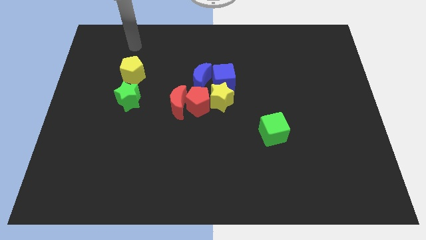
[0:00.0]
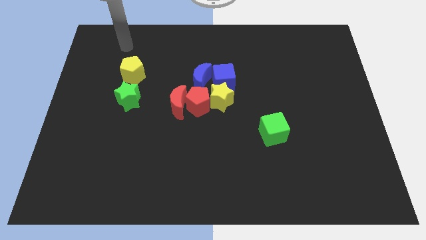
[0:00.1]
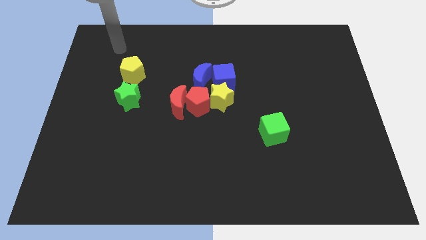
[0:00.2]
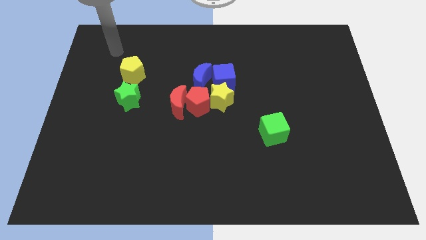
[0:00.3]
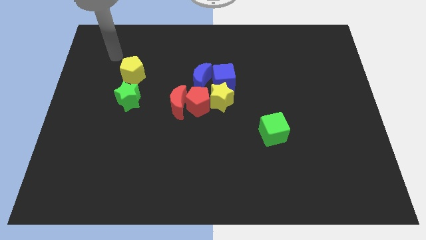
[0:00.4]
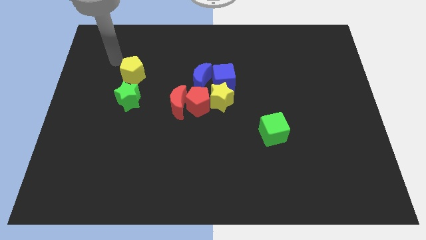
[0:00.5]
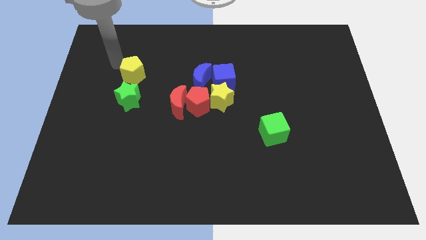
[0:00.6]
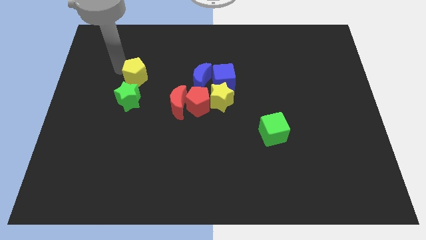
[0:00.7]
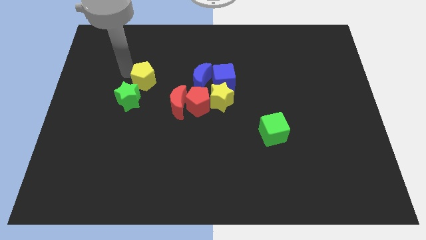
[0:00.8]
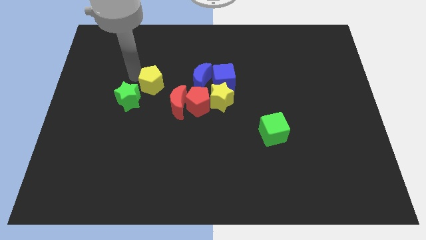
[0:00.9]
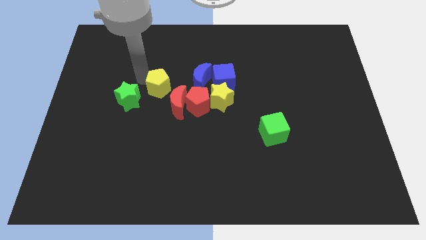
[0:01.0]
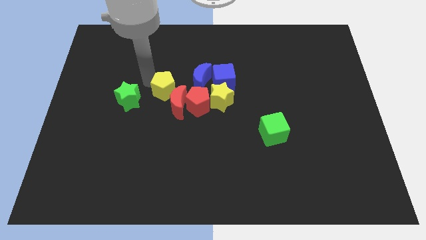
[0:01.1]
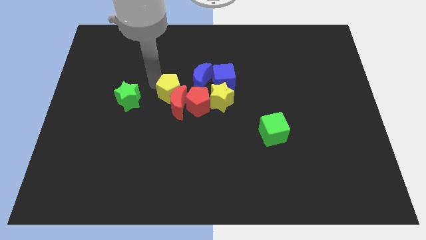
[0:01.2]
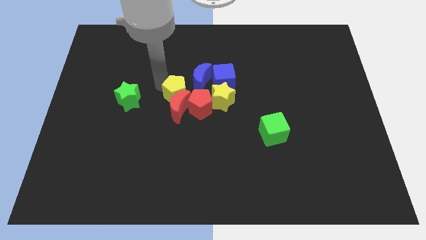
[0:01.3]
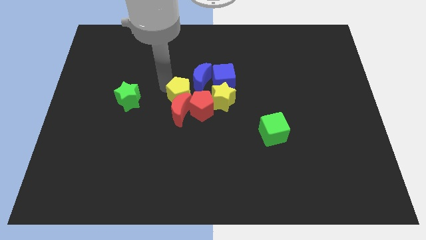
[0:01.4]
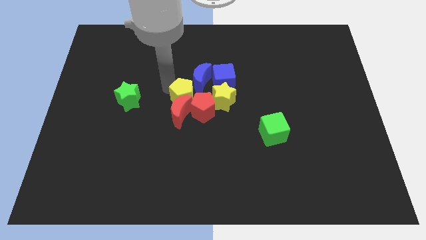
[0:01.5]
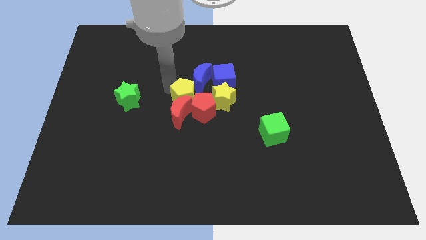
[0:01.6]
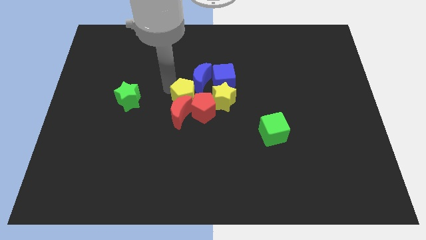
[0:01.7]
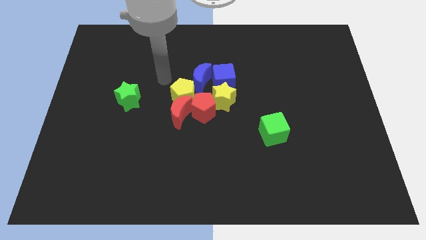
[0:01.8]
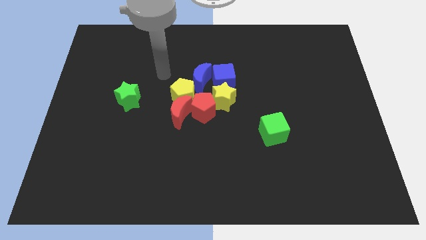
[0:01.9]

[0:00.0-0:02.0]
move the yellow pentagon into the red crescent

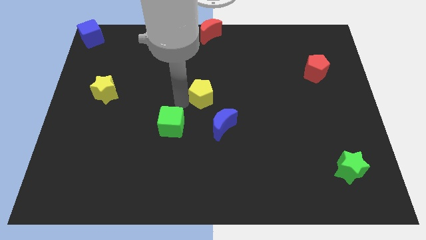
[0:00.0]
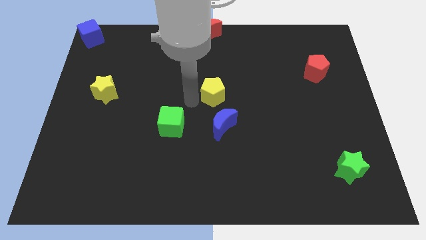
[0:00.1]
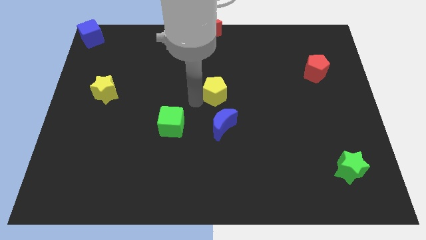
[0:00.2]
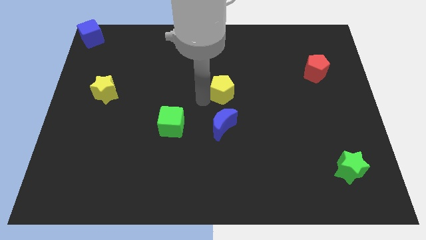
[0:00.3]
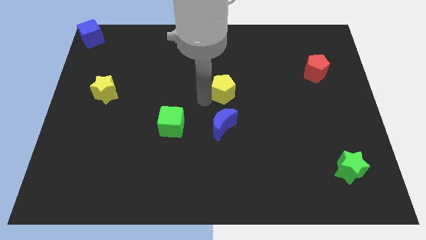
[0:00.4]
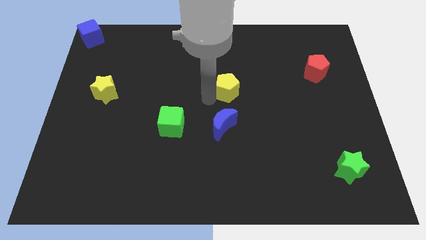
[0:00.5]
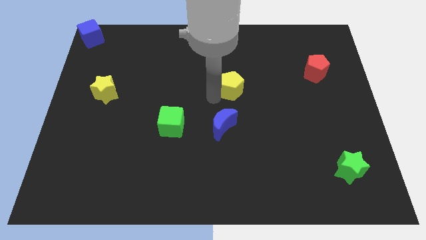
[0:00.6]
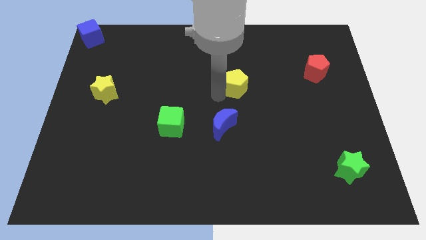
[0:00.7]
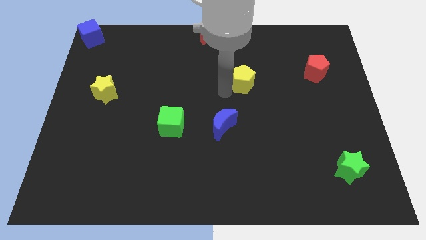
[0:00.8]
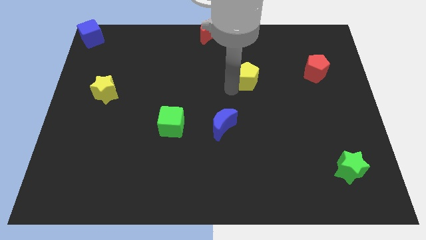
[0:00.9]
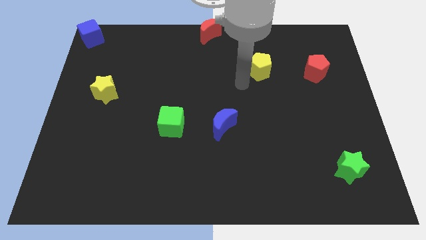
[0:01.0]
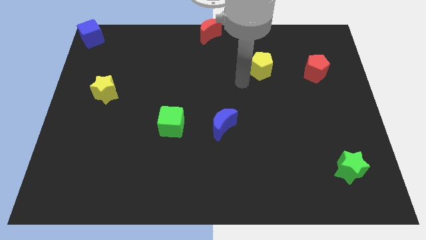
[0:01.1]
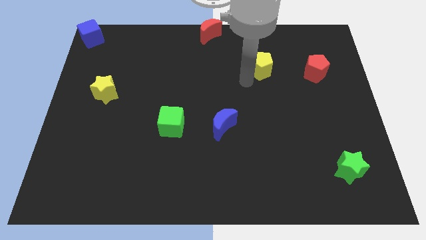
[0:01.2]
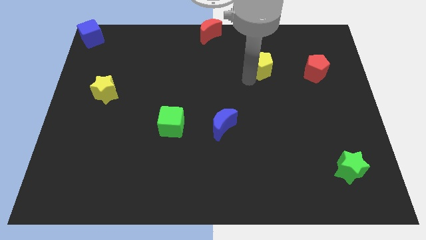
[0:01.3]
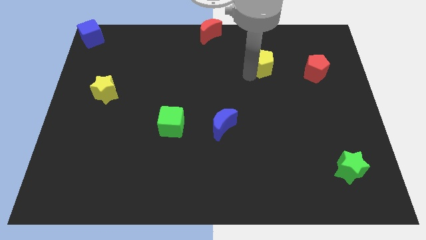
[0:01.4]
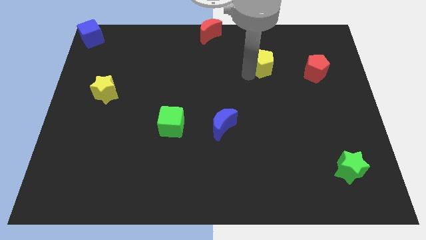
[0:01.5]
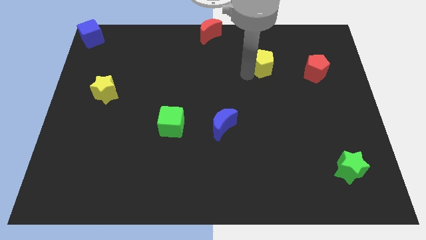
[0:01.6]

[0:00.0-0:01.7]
push the yellow pentagon to the left of the red pentagon

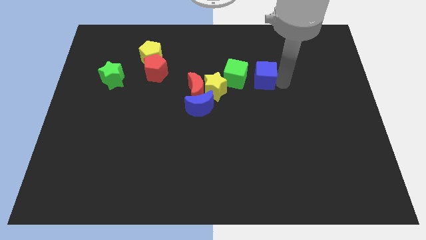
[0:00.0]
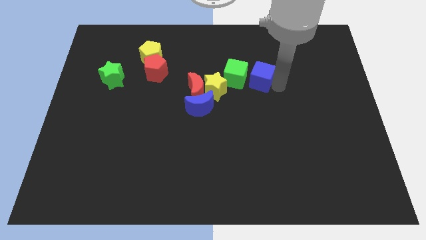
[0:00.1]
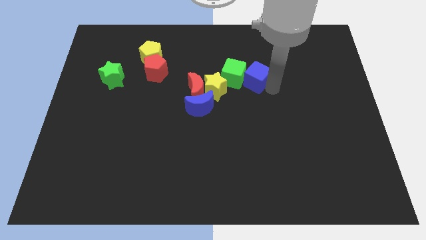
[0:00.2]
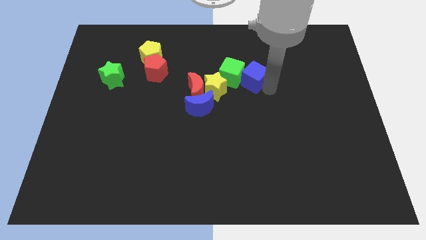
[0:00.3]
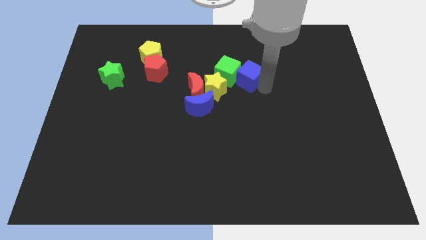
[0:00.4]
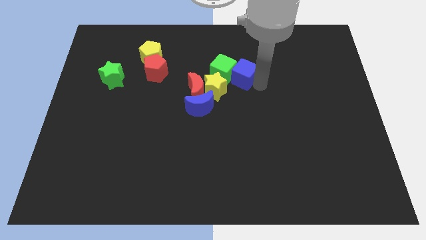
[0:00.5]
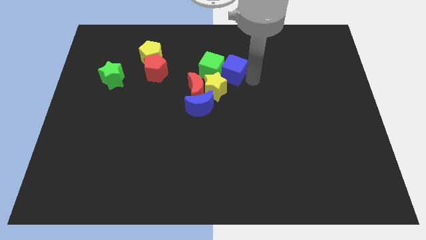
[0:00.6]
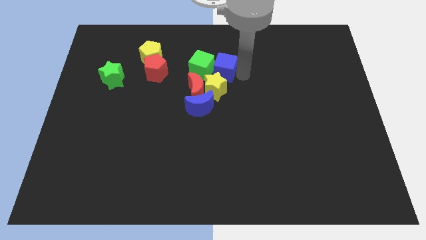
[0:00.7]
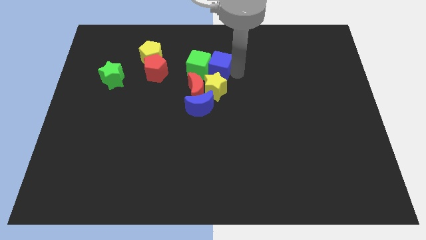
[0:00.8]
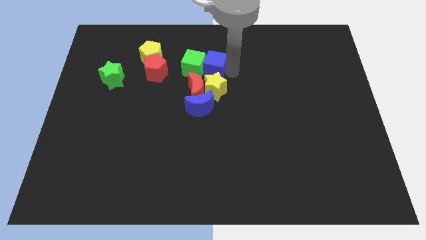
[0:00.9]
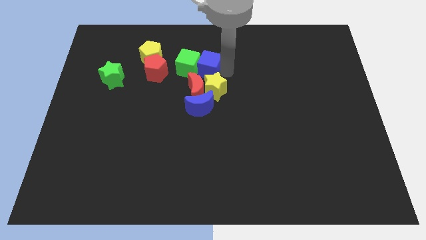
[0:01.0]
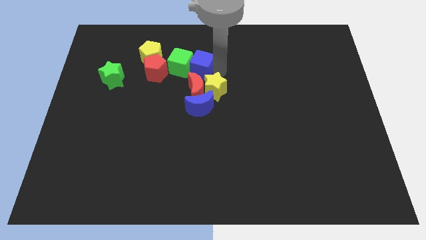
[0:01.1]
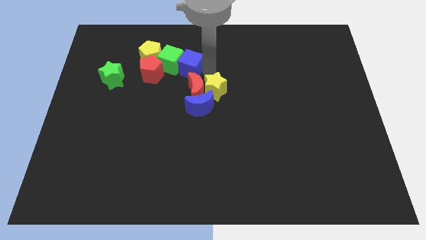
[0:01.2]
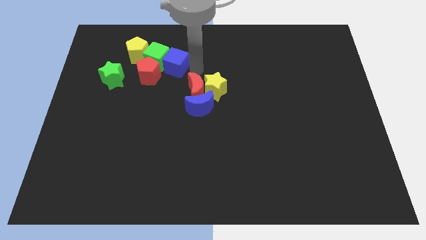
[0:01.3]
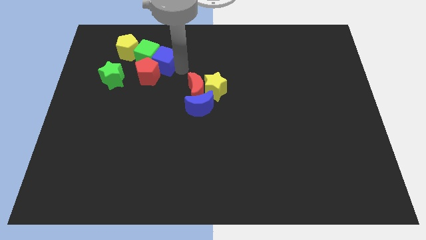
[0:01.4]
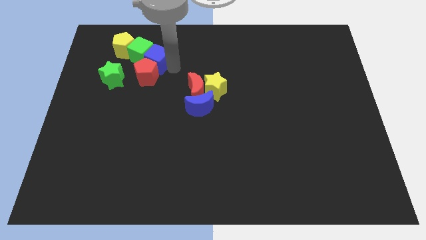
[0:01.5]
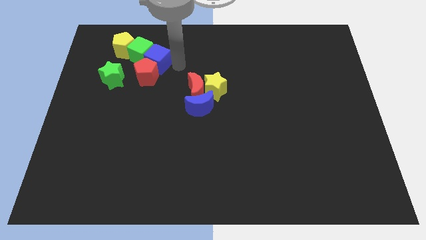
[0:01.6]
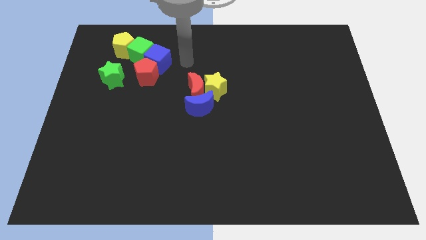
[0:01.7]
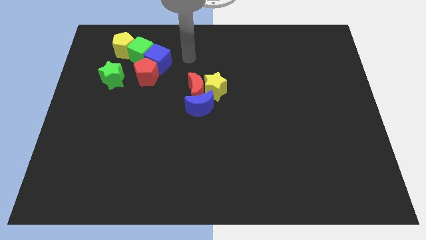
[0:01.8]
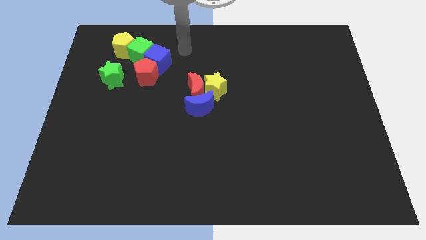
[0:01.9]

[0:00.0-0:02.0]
push the blue cube into the green cube

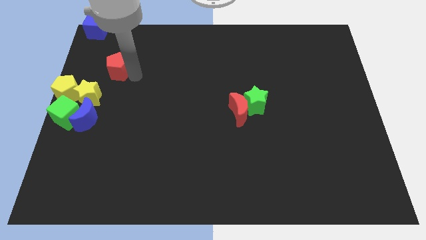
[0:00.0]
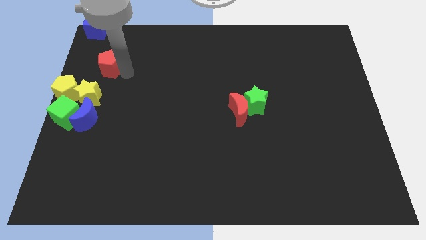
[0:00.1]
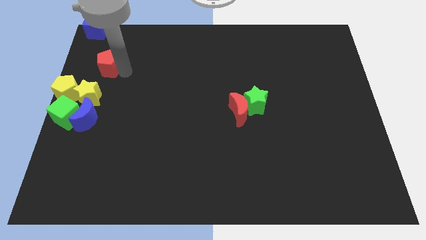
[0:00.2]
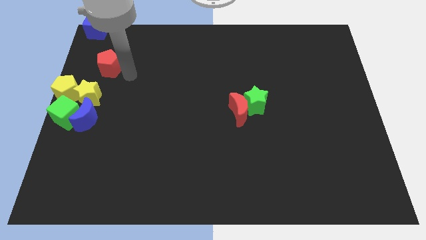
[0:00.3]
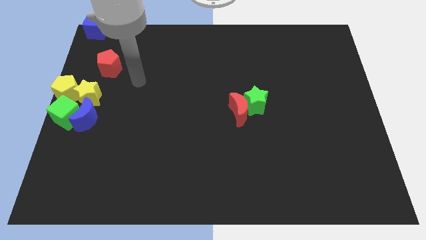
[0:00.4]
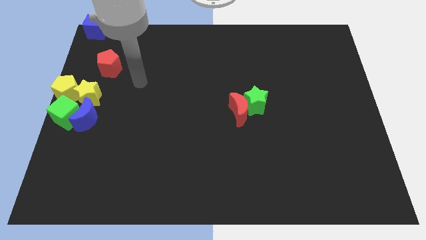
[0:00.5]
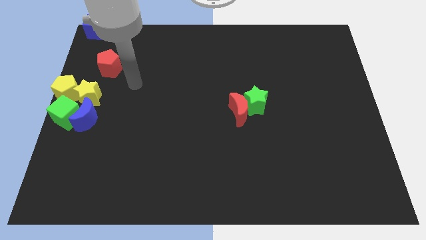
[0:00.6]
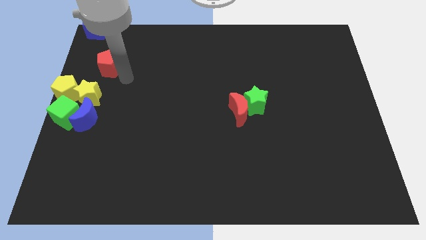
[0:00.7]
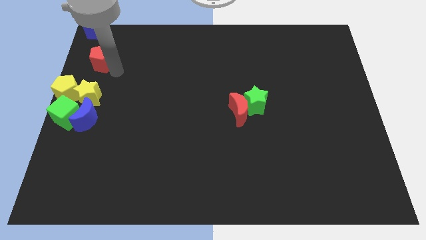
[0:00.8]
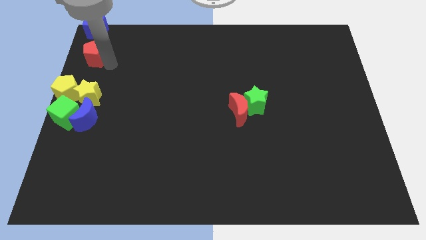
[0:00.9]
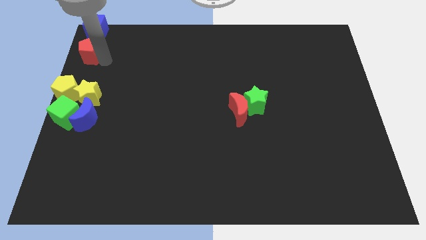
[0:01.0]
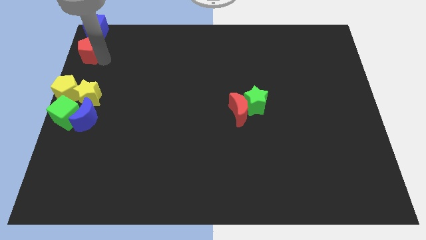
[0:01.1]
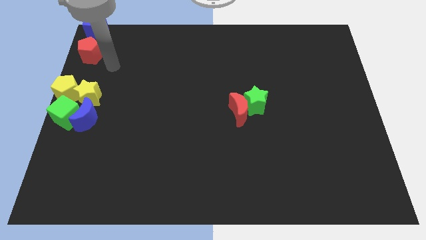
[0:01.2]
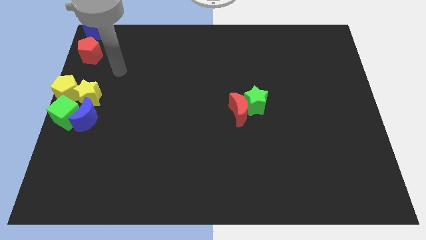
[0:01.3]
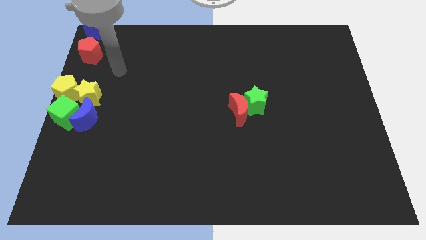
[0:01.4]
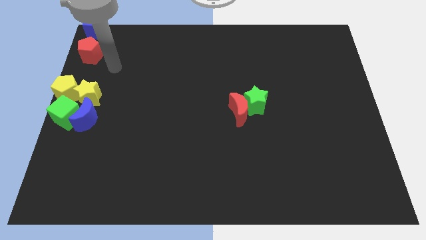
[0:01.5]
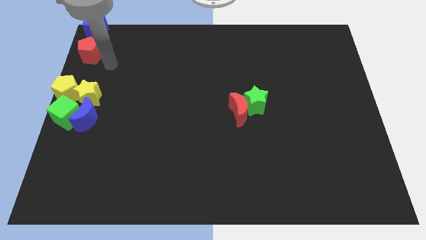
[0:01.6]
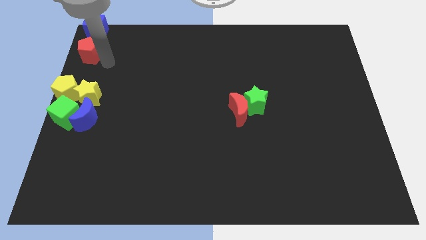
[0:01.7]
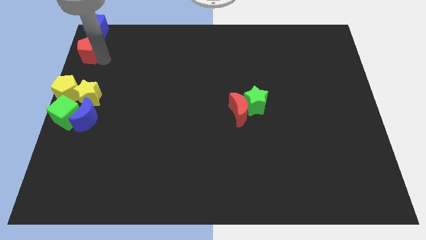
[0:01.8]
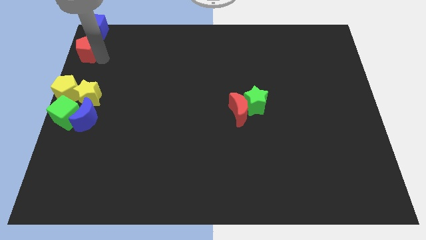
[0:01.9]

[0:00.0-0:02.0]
move the red pentagon to the bottom of the blue cube

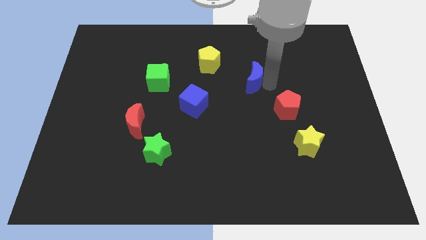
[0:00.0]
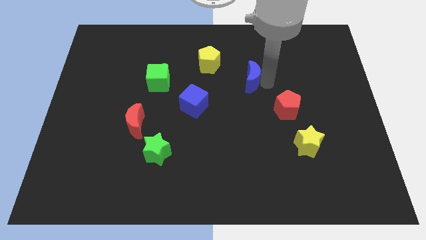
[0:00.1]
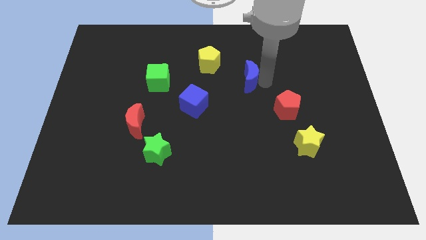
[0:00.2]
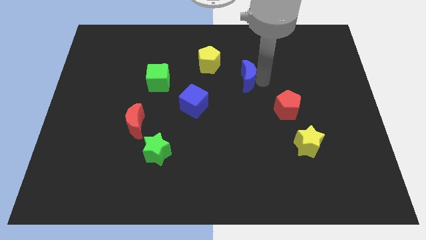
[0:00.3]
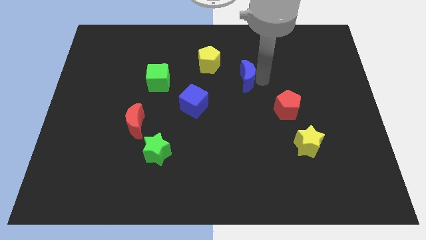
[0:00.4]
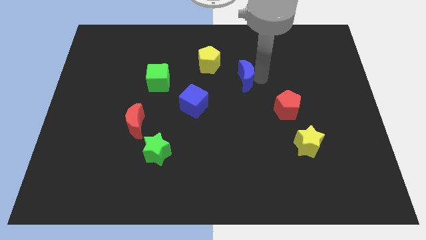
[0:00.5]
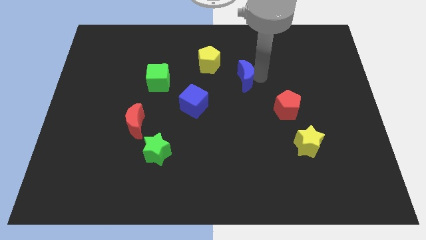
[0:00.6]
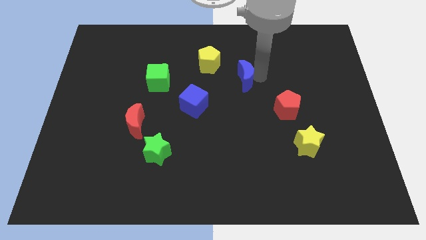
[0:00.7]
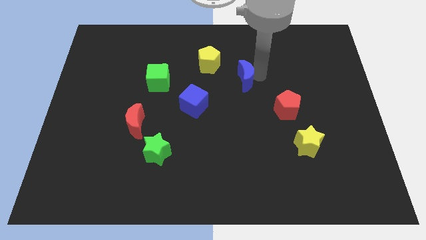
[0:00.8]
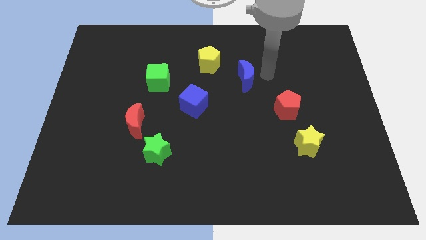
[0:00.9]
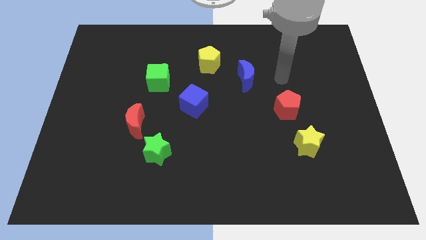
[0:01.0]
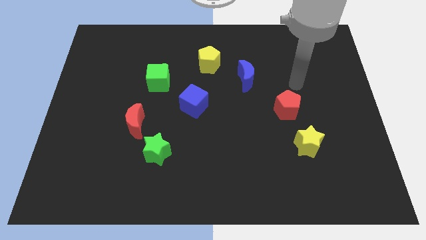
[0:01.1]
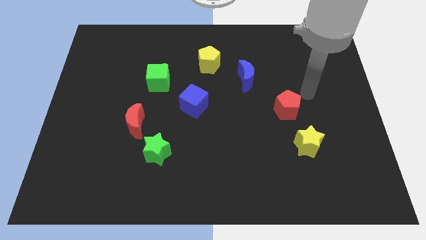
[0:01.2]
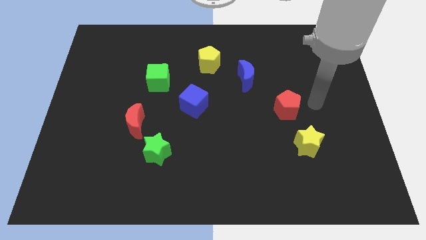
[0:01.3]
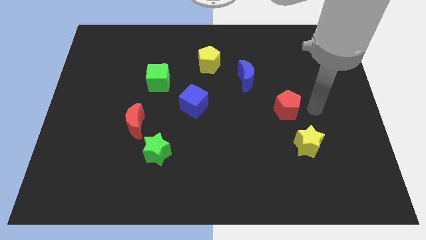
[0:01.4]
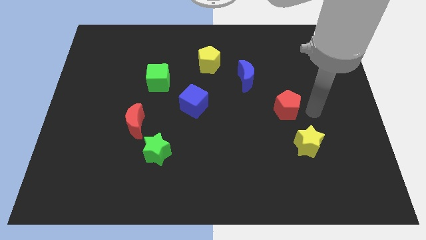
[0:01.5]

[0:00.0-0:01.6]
place the blue crescent diagonally in between both the pentagons
